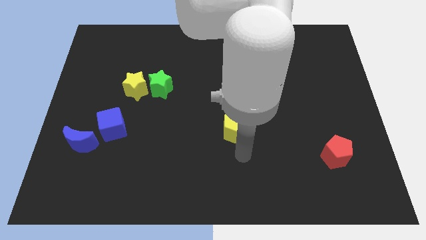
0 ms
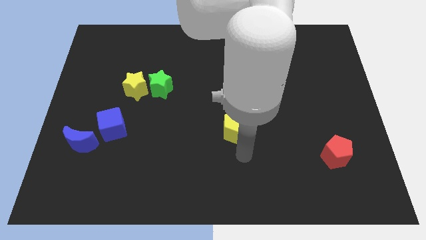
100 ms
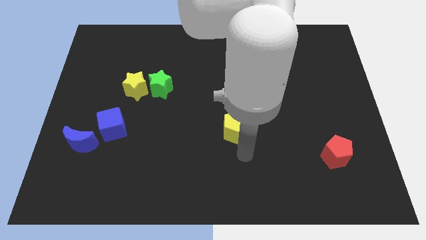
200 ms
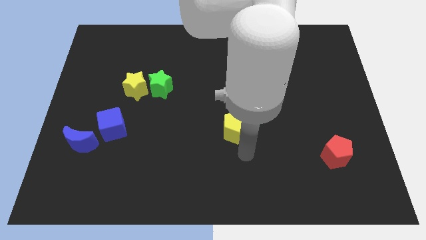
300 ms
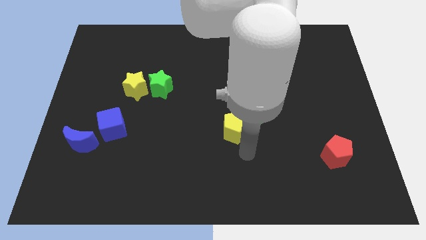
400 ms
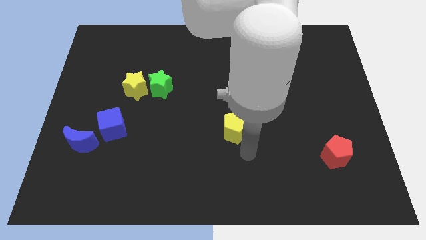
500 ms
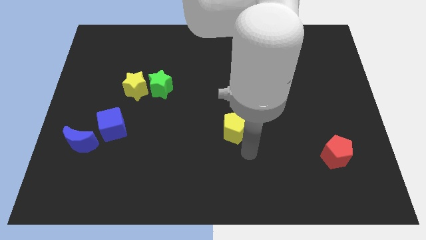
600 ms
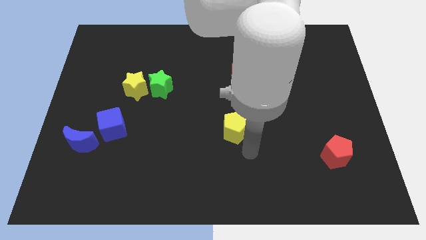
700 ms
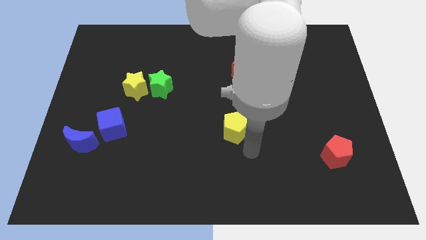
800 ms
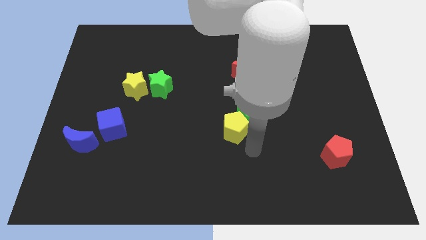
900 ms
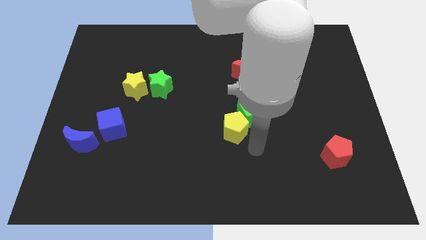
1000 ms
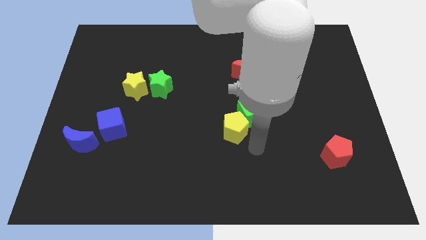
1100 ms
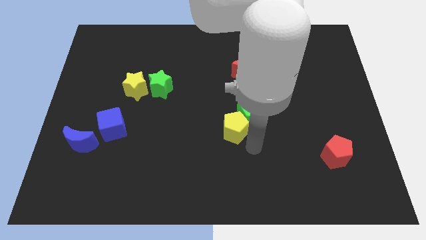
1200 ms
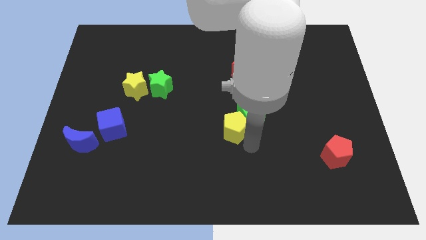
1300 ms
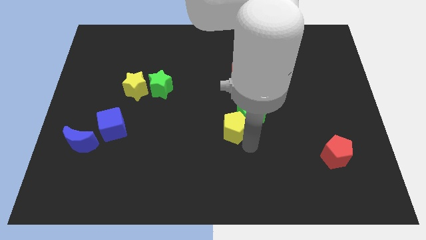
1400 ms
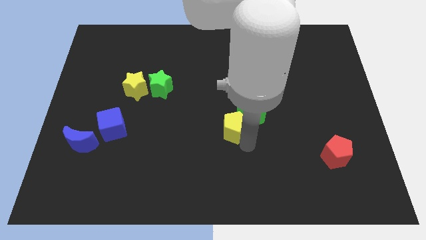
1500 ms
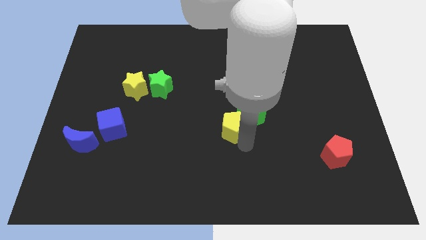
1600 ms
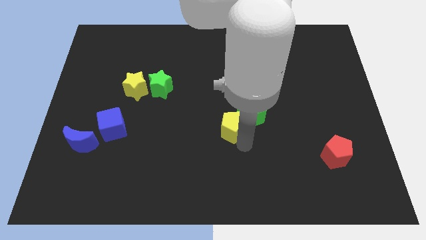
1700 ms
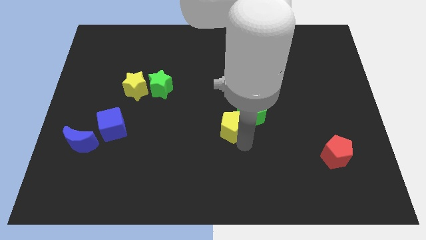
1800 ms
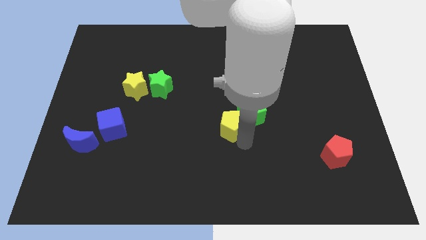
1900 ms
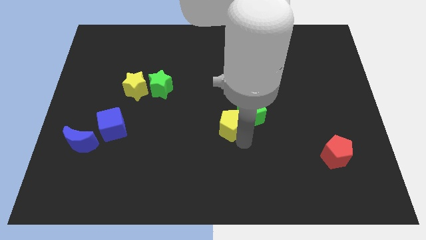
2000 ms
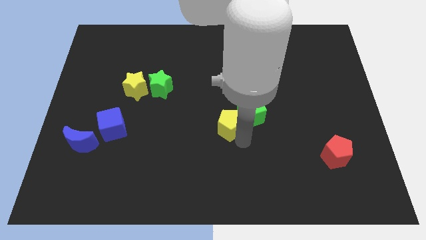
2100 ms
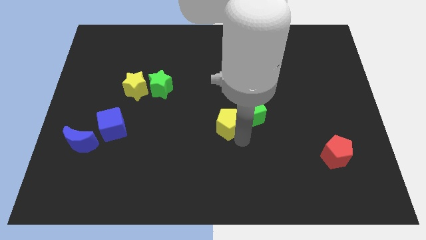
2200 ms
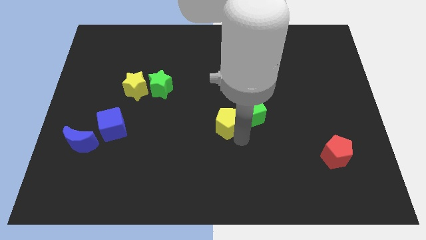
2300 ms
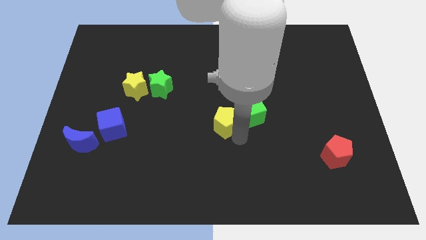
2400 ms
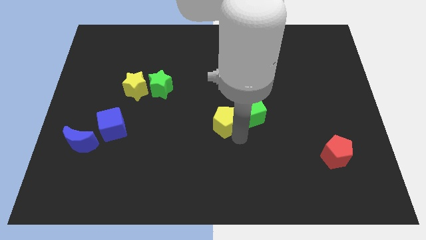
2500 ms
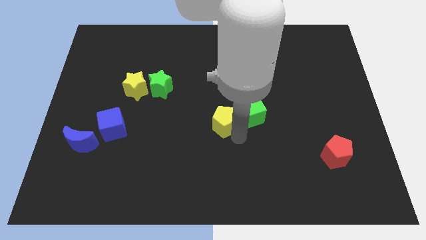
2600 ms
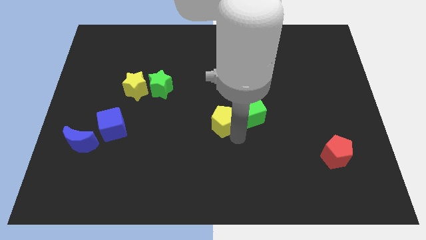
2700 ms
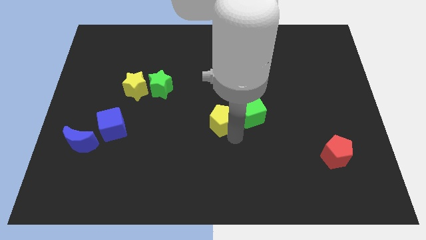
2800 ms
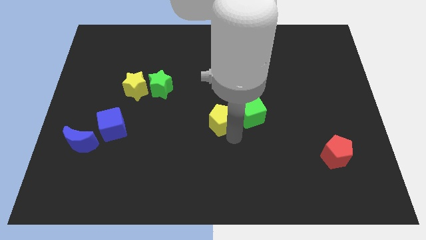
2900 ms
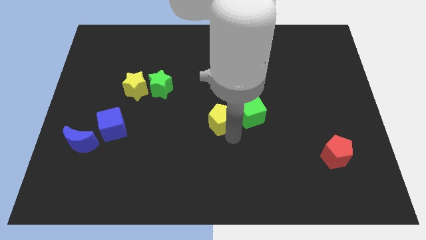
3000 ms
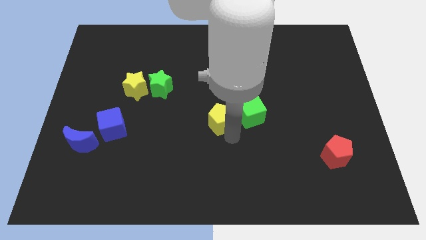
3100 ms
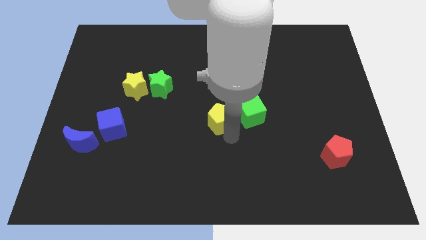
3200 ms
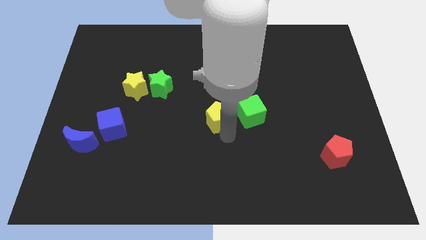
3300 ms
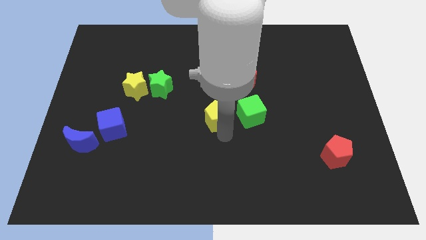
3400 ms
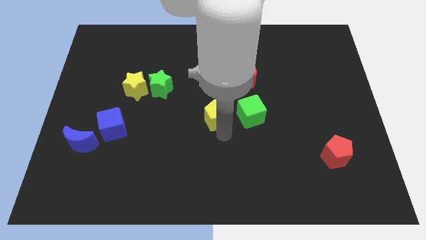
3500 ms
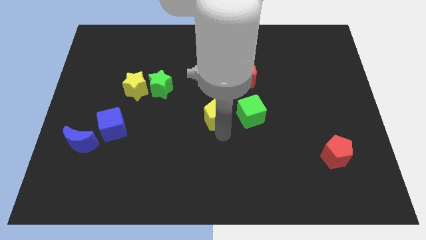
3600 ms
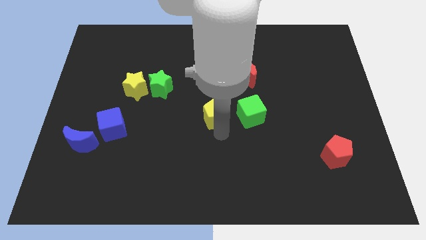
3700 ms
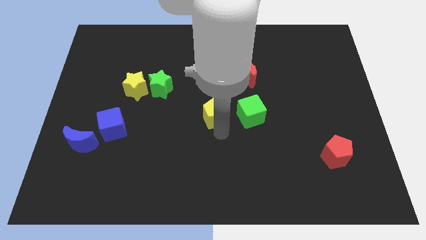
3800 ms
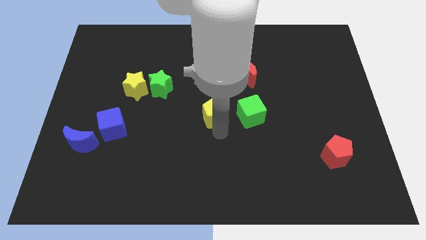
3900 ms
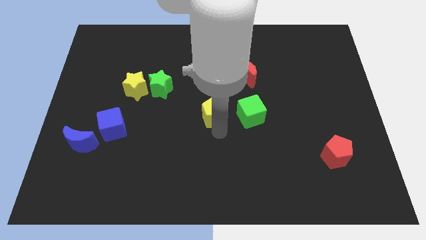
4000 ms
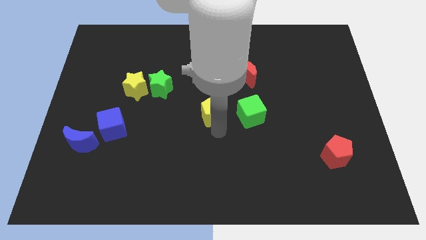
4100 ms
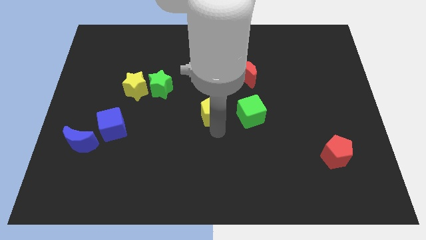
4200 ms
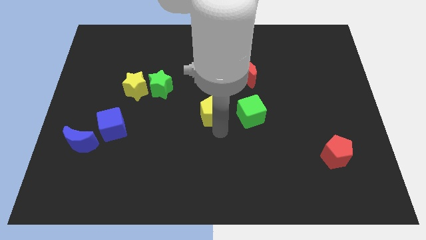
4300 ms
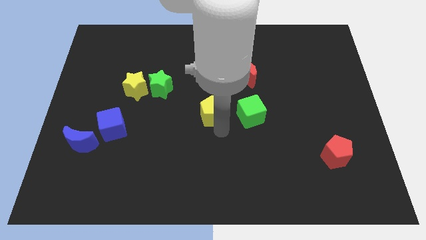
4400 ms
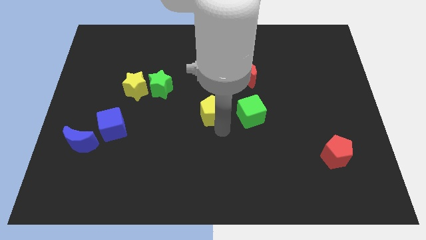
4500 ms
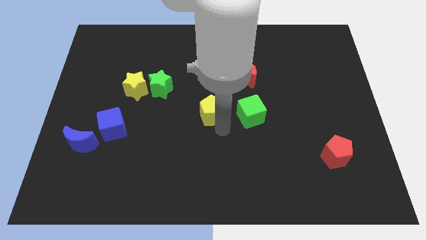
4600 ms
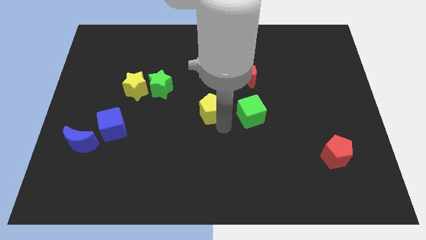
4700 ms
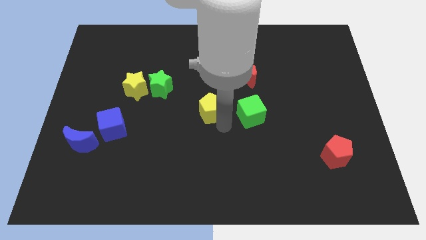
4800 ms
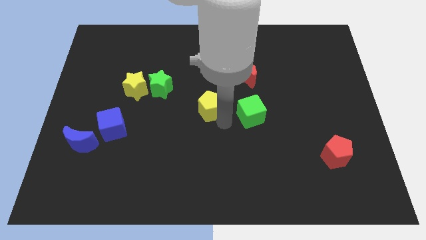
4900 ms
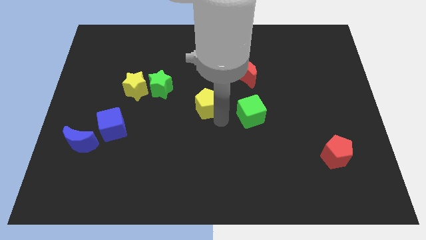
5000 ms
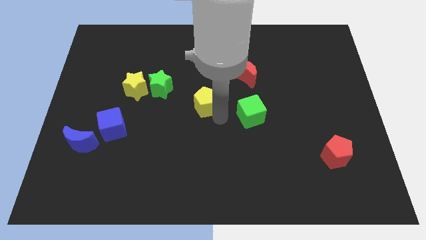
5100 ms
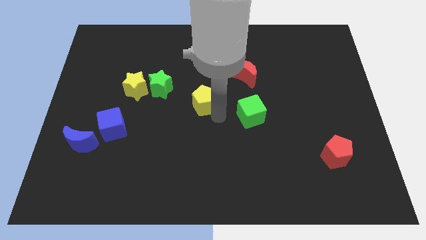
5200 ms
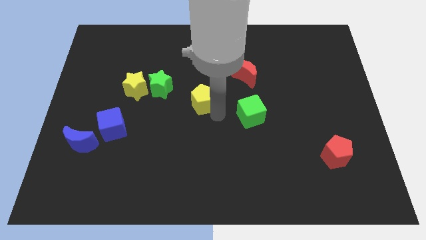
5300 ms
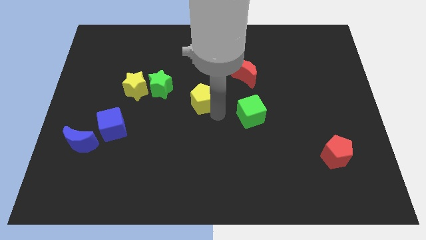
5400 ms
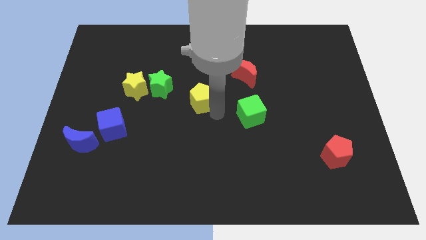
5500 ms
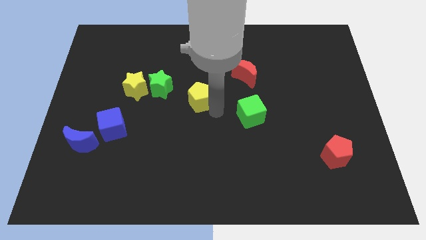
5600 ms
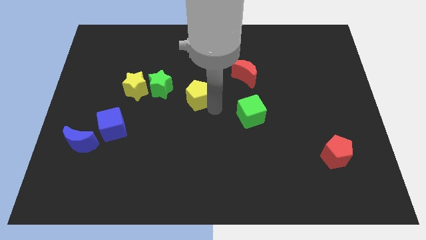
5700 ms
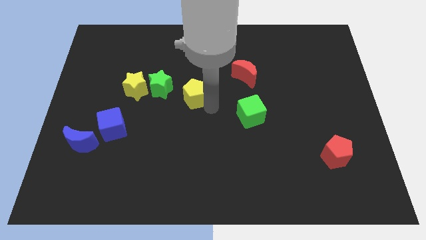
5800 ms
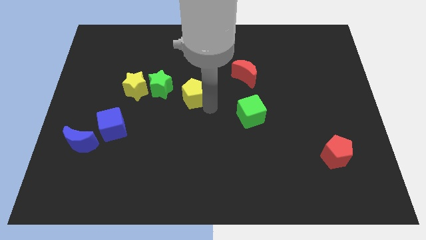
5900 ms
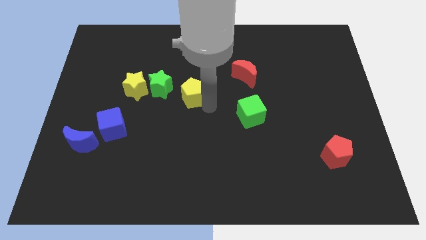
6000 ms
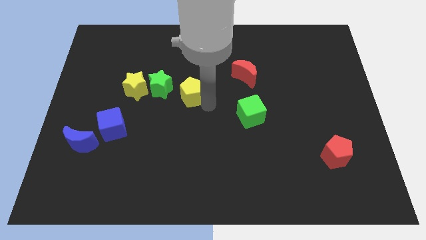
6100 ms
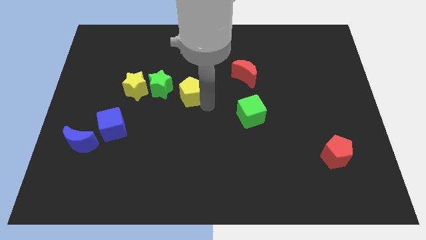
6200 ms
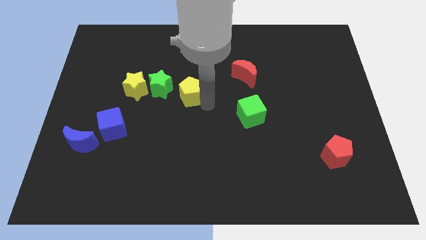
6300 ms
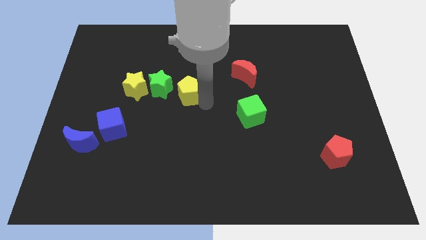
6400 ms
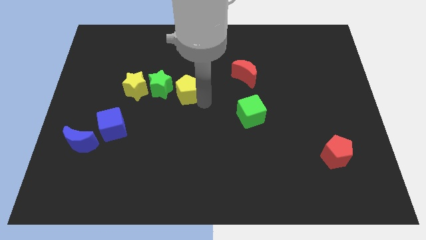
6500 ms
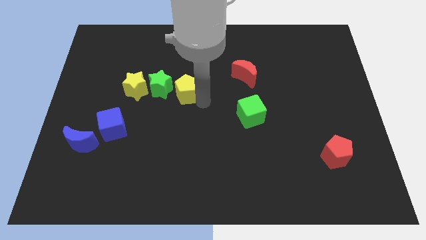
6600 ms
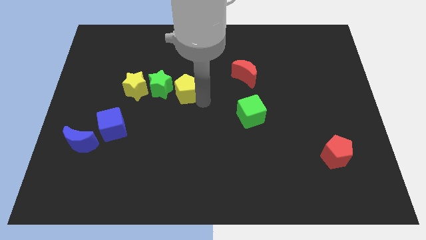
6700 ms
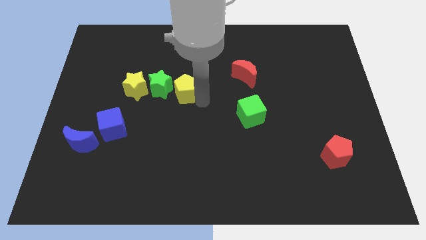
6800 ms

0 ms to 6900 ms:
put the yellow pentagon on the right side of the green star

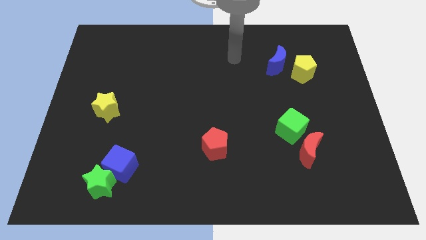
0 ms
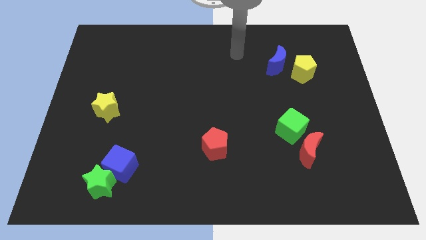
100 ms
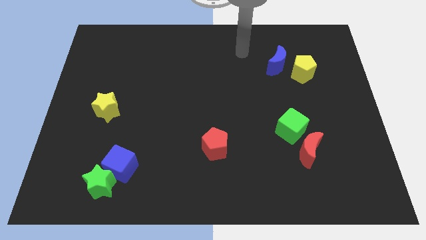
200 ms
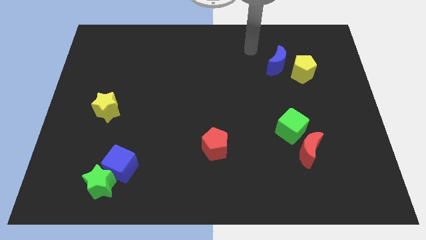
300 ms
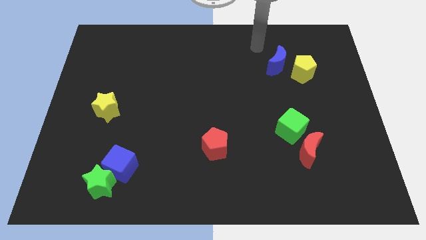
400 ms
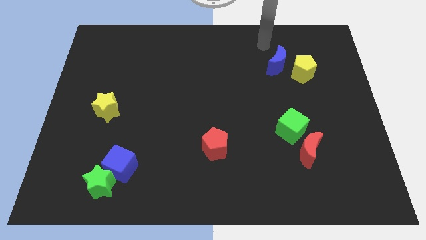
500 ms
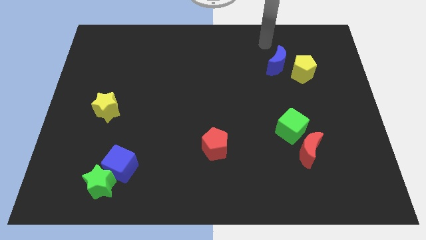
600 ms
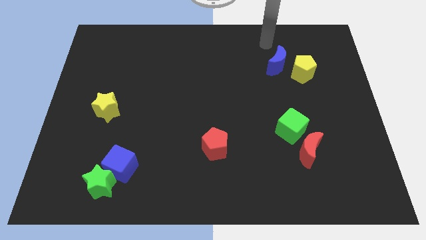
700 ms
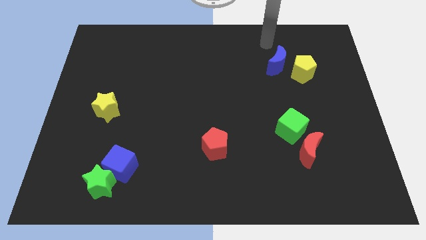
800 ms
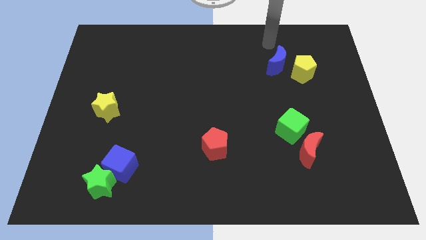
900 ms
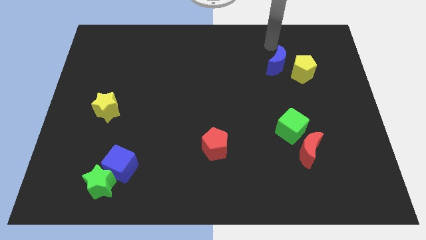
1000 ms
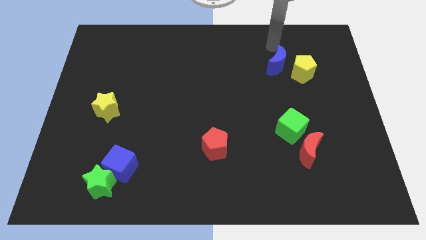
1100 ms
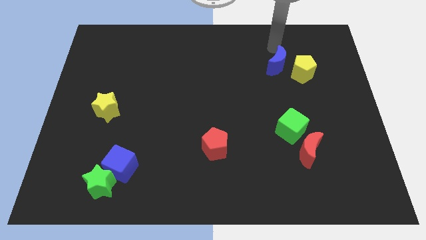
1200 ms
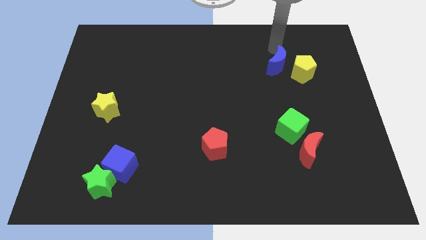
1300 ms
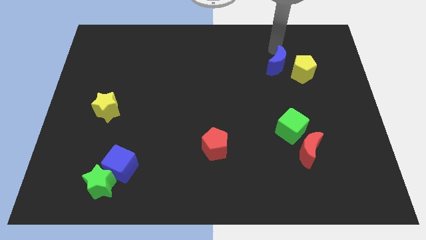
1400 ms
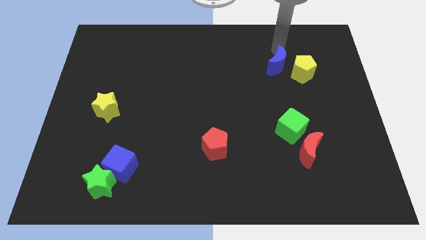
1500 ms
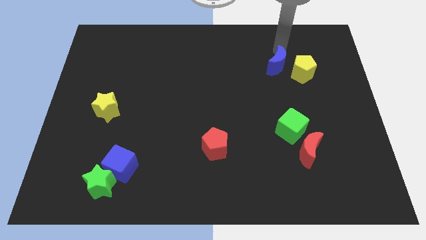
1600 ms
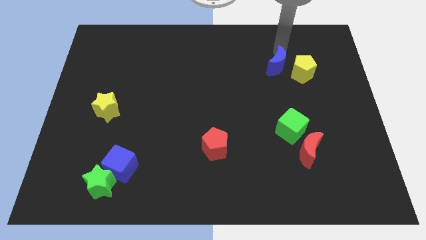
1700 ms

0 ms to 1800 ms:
point your arm at the top side of the blue moon

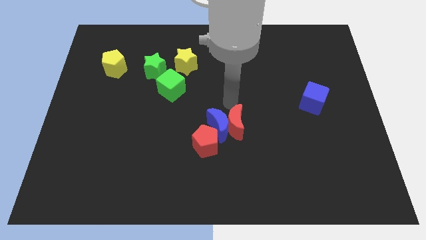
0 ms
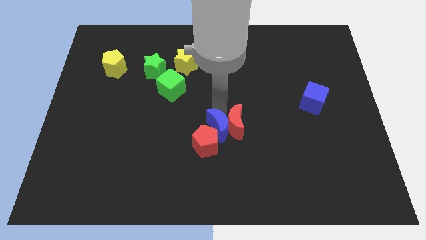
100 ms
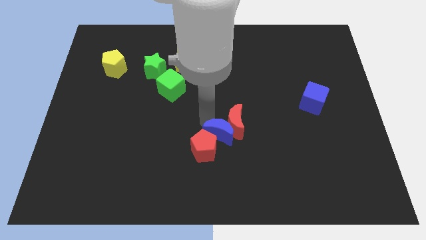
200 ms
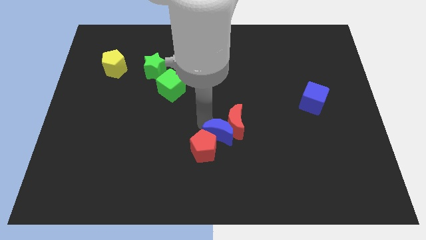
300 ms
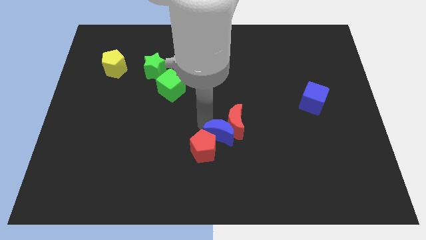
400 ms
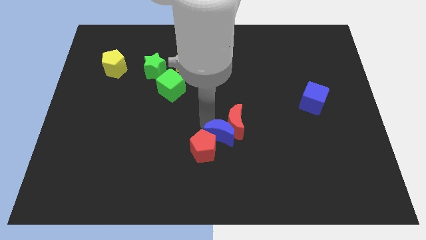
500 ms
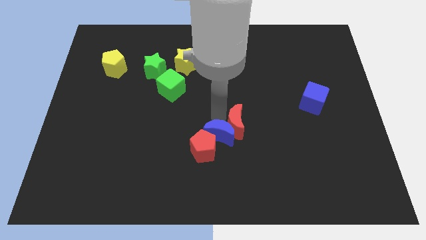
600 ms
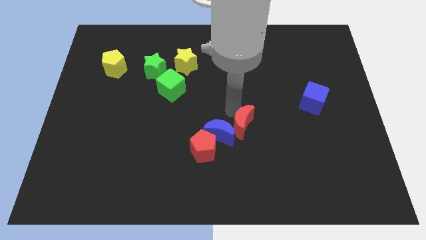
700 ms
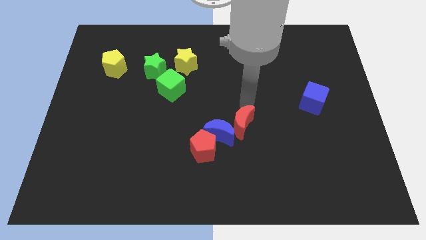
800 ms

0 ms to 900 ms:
push the blue moon into the red pentagon
